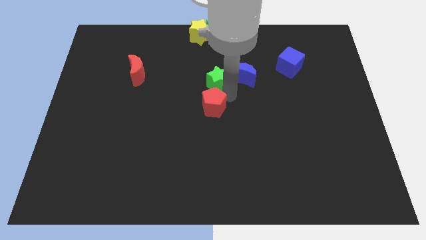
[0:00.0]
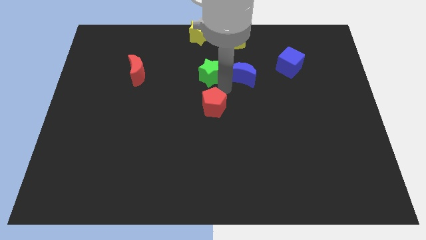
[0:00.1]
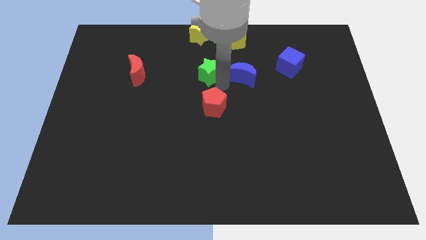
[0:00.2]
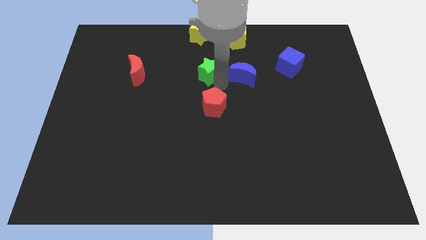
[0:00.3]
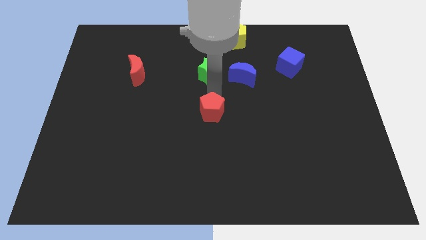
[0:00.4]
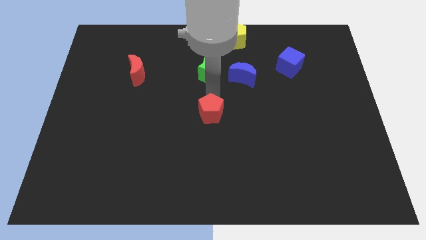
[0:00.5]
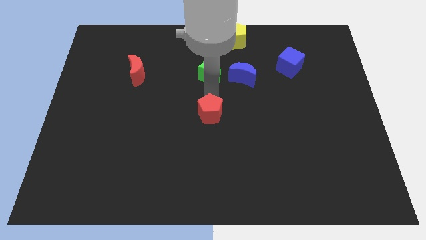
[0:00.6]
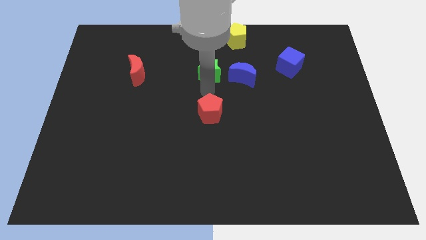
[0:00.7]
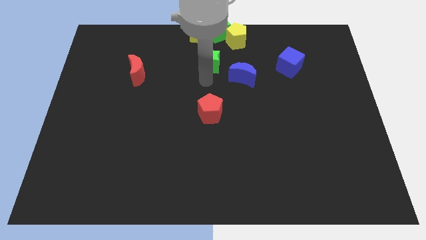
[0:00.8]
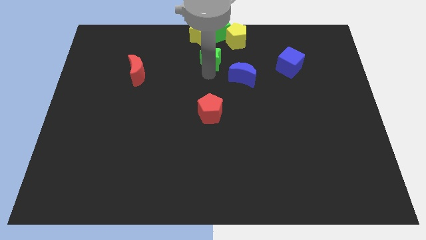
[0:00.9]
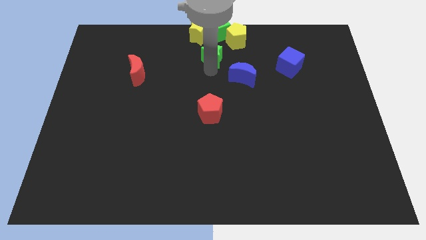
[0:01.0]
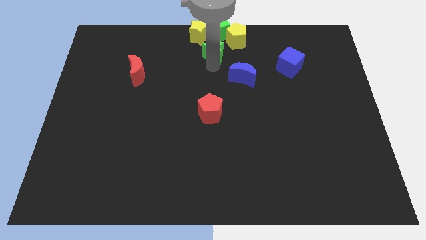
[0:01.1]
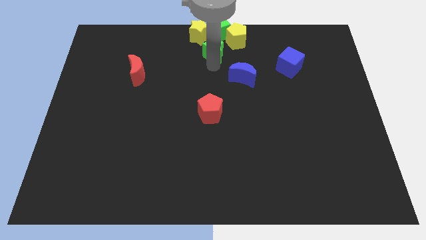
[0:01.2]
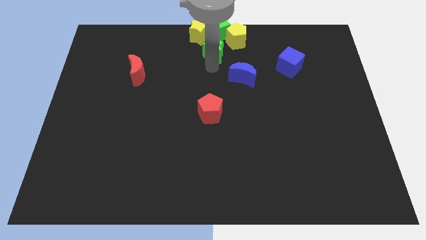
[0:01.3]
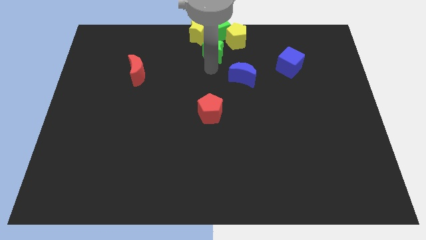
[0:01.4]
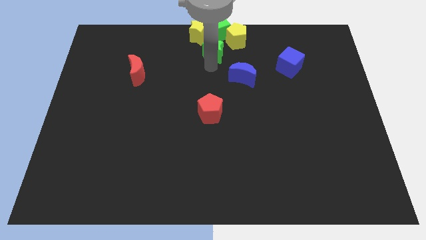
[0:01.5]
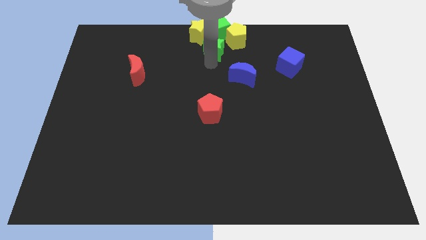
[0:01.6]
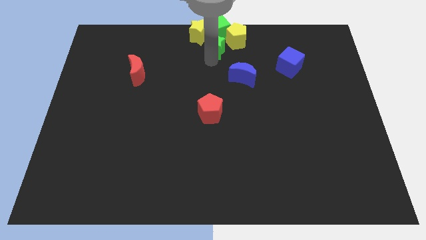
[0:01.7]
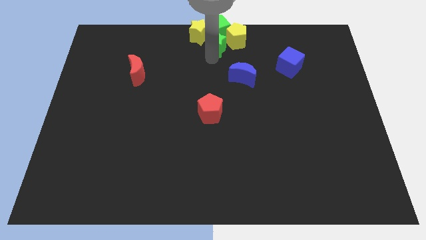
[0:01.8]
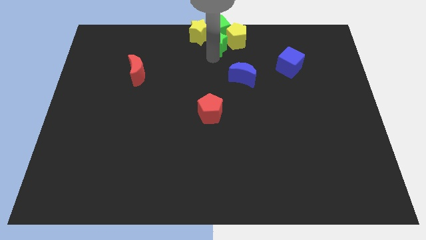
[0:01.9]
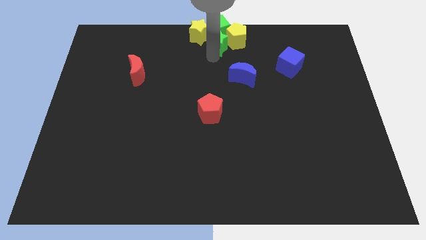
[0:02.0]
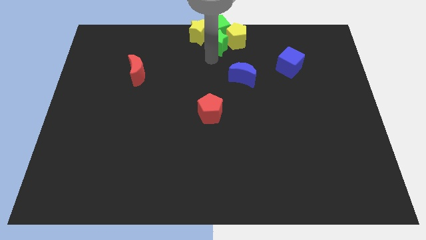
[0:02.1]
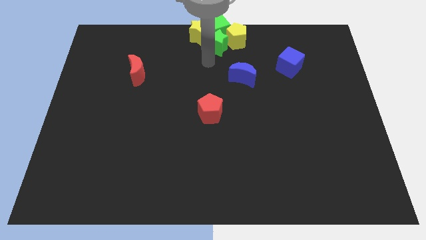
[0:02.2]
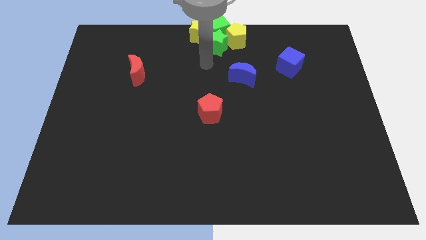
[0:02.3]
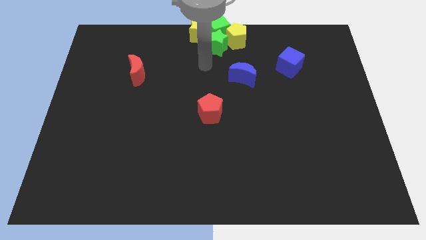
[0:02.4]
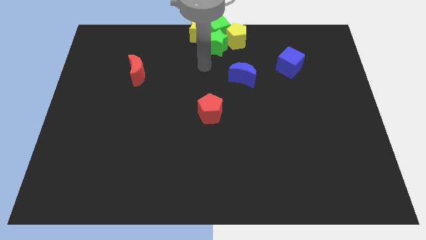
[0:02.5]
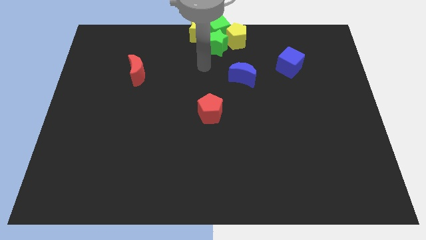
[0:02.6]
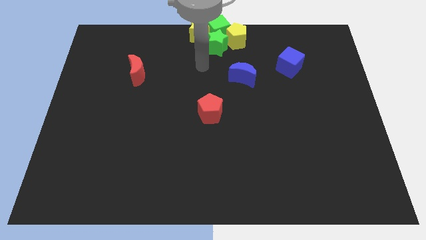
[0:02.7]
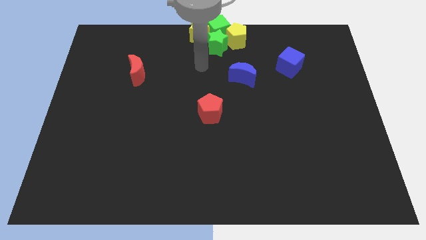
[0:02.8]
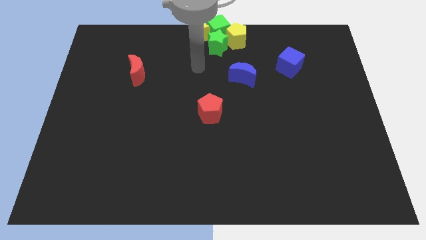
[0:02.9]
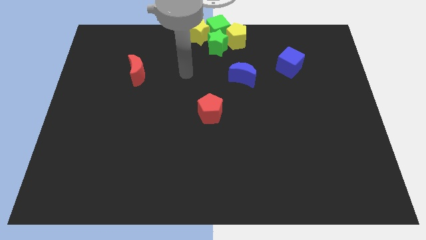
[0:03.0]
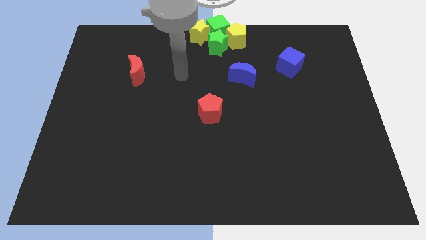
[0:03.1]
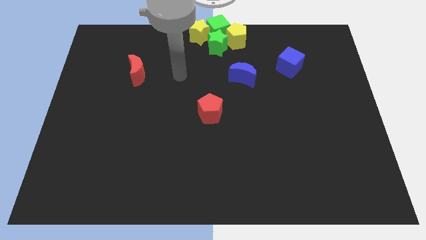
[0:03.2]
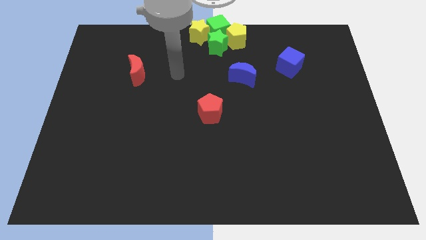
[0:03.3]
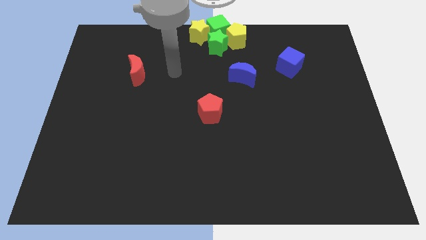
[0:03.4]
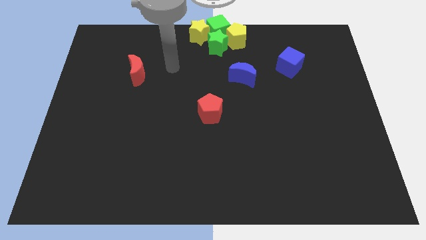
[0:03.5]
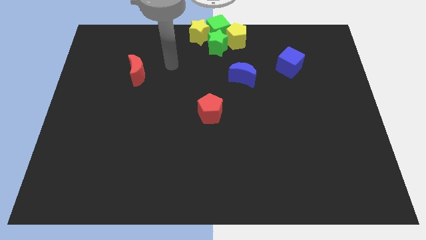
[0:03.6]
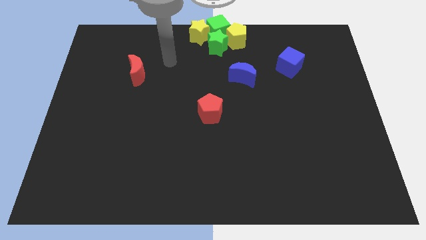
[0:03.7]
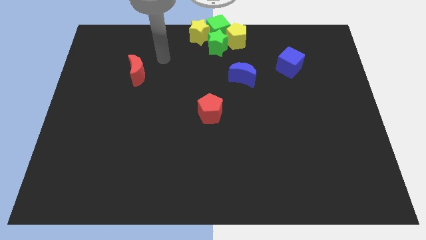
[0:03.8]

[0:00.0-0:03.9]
move the green star below the green cube

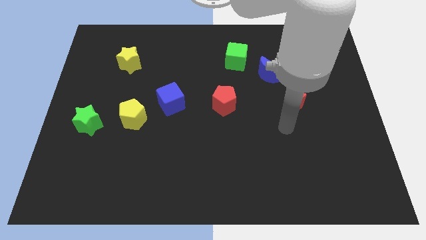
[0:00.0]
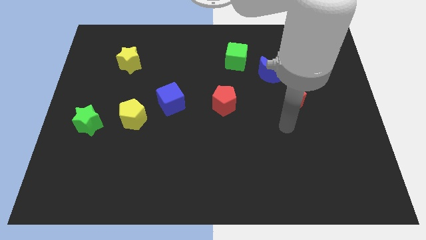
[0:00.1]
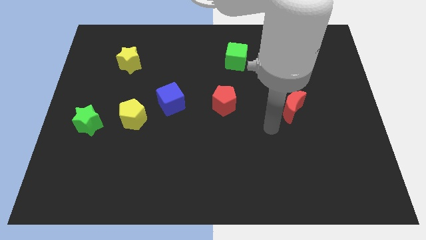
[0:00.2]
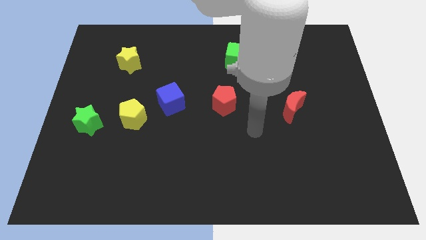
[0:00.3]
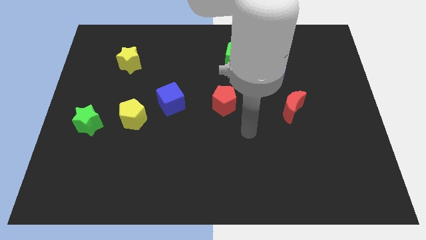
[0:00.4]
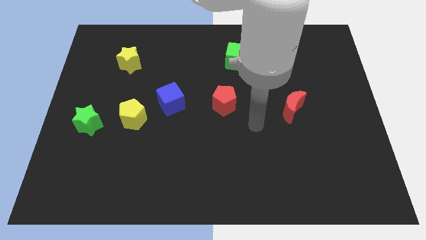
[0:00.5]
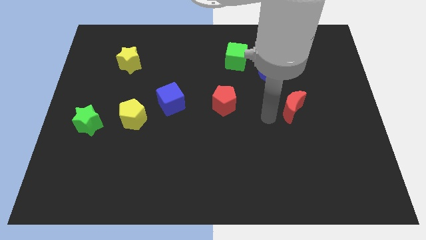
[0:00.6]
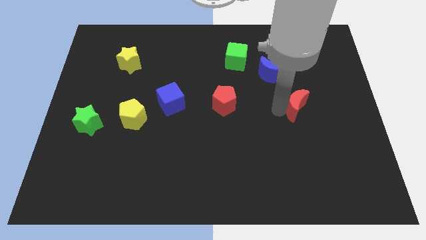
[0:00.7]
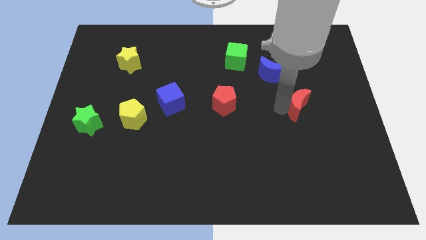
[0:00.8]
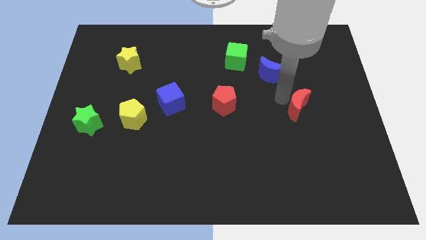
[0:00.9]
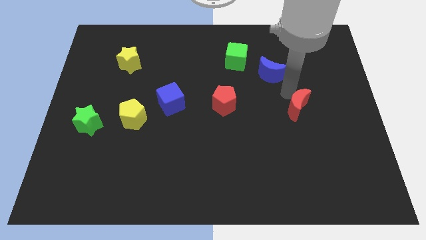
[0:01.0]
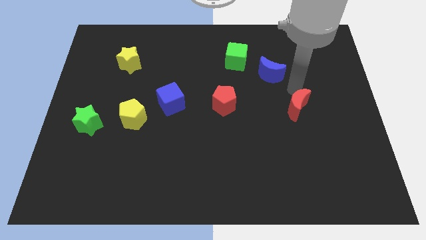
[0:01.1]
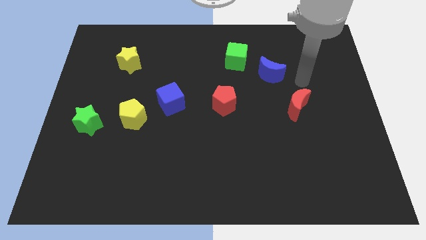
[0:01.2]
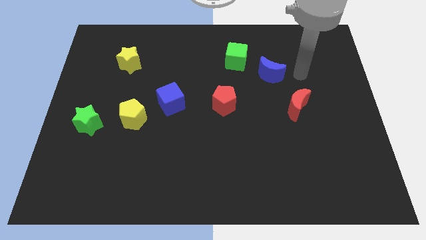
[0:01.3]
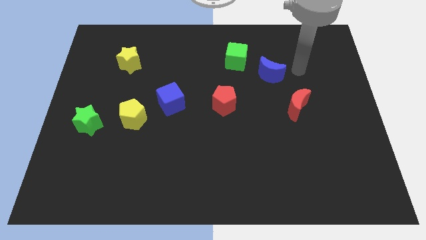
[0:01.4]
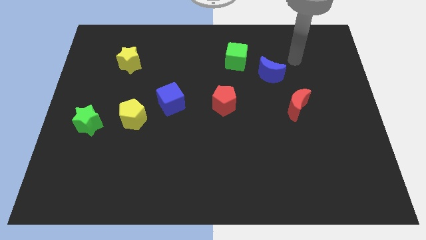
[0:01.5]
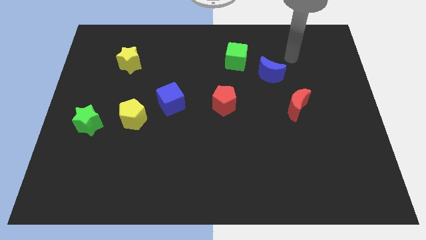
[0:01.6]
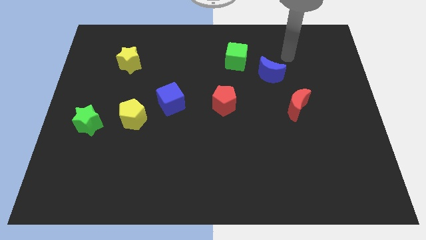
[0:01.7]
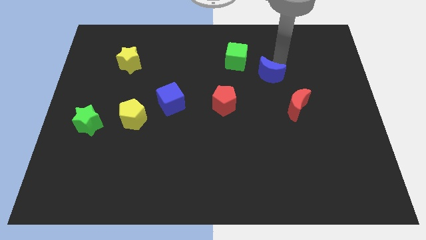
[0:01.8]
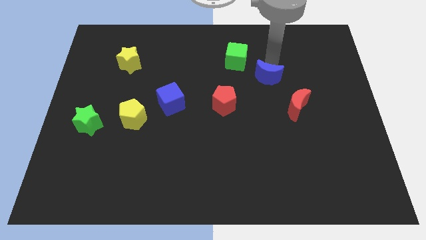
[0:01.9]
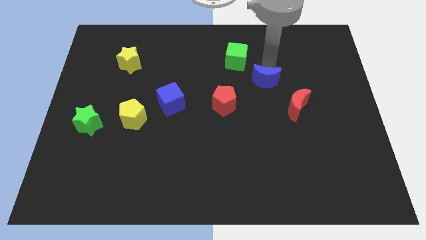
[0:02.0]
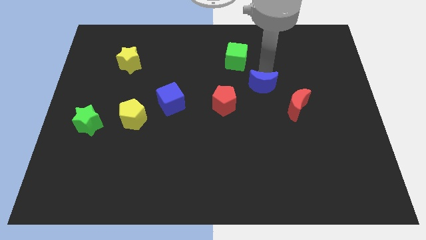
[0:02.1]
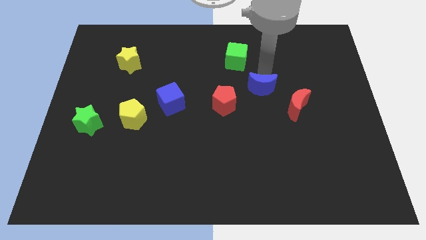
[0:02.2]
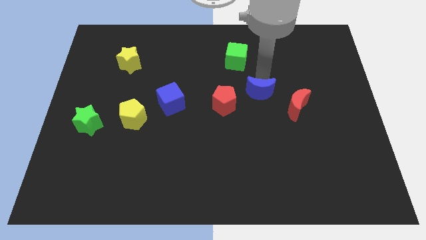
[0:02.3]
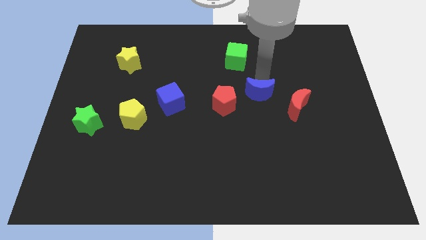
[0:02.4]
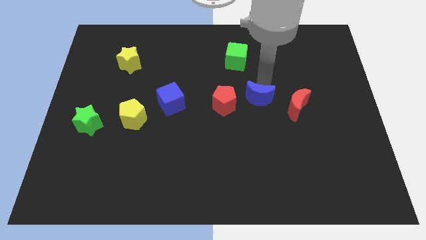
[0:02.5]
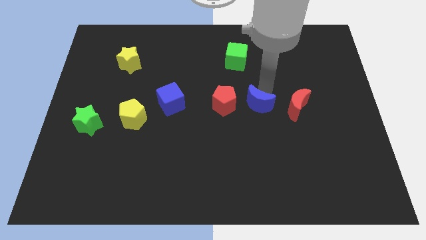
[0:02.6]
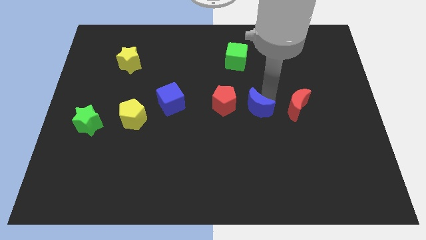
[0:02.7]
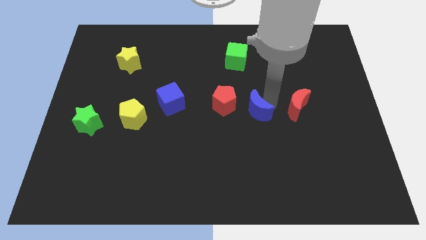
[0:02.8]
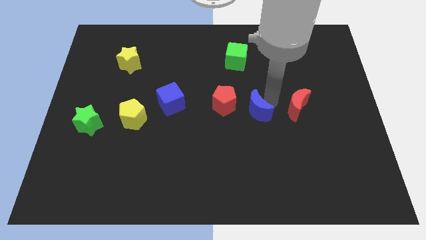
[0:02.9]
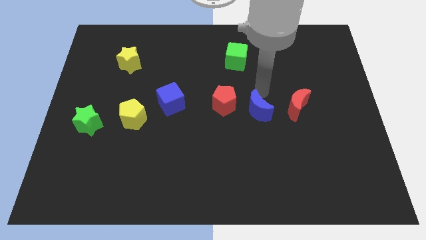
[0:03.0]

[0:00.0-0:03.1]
push blue crescent in between red crescent and red pentagon

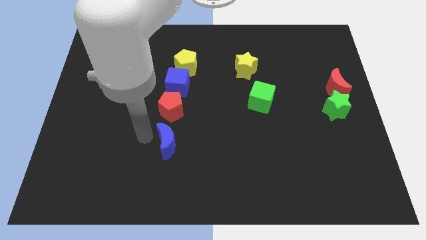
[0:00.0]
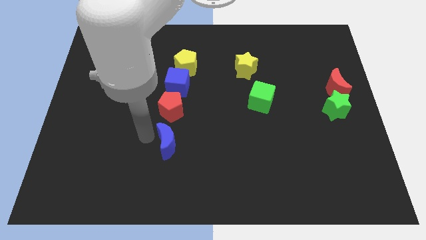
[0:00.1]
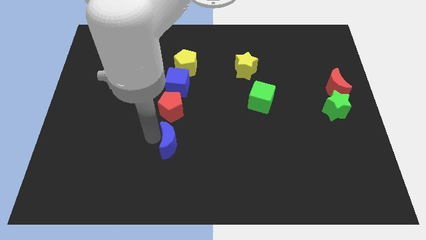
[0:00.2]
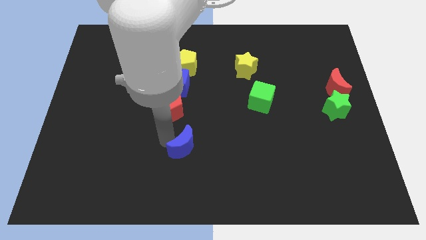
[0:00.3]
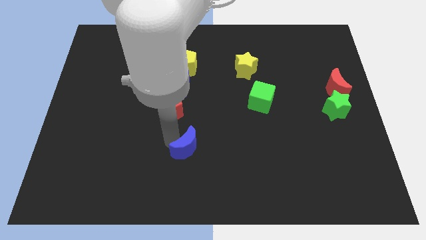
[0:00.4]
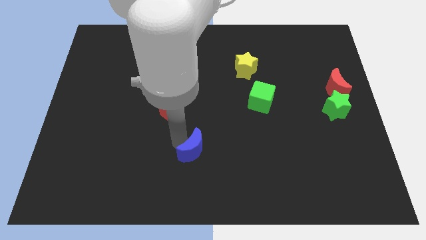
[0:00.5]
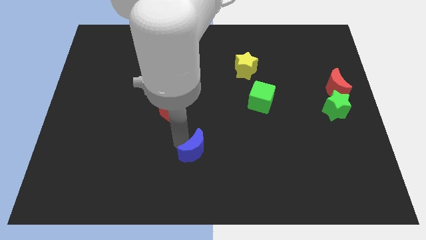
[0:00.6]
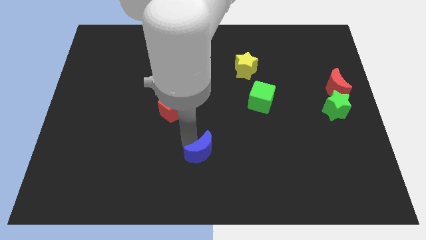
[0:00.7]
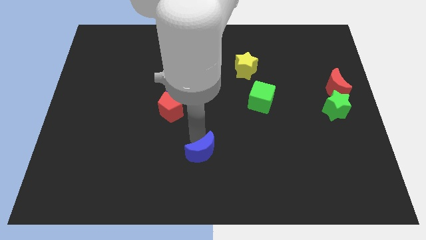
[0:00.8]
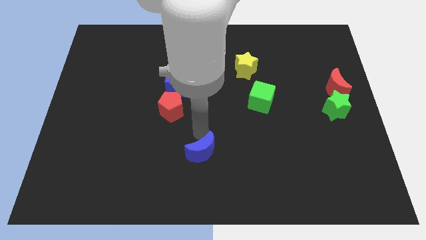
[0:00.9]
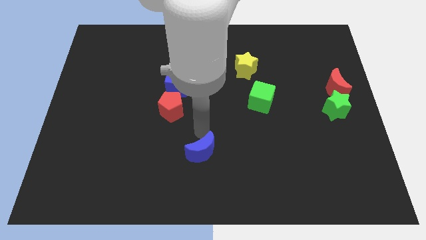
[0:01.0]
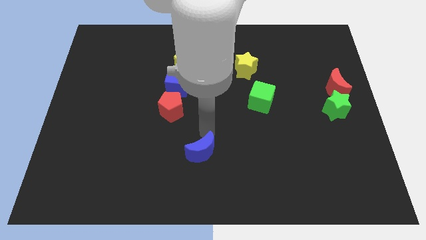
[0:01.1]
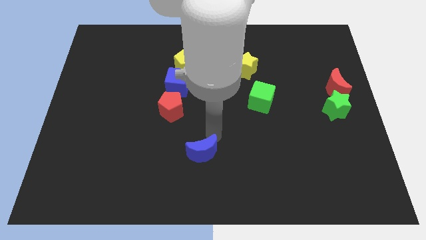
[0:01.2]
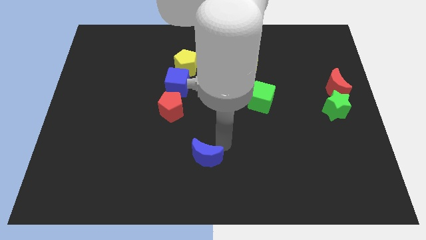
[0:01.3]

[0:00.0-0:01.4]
push the blue crescent to the right of the board

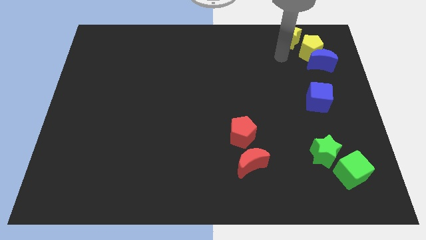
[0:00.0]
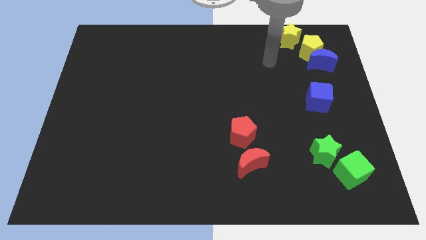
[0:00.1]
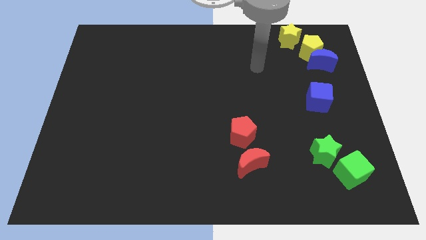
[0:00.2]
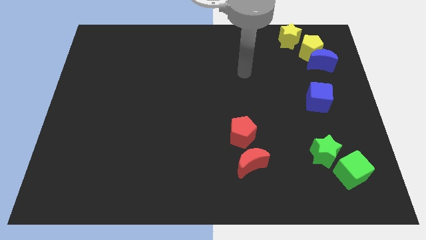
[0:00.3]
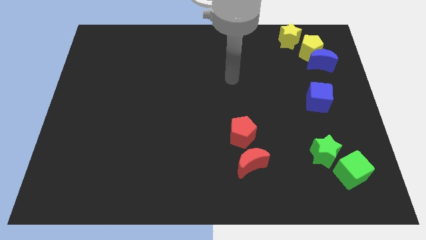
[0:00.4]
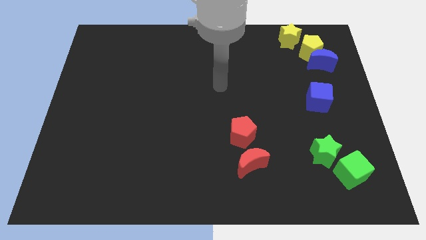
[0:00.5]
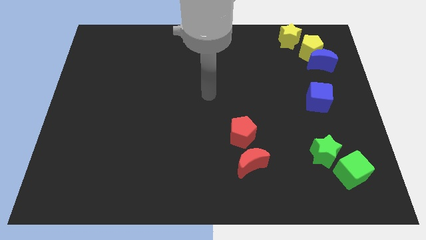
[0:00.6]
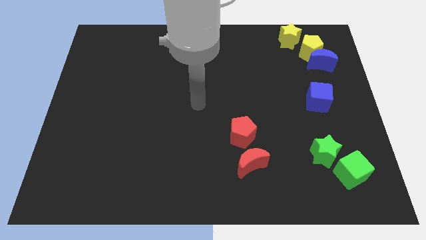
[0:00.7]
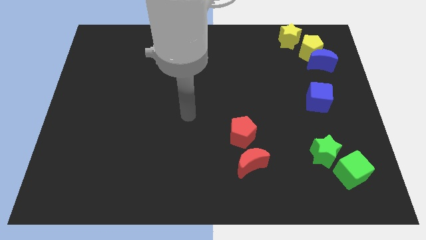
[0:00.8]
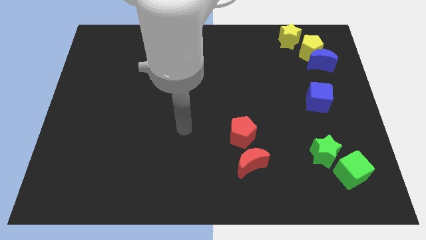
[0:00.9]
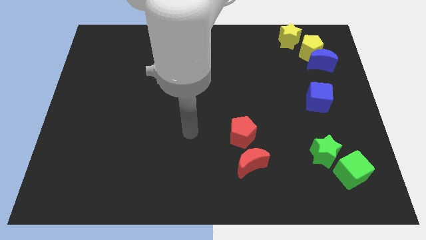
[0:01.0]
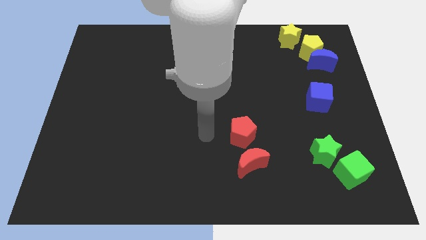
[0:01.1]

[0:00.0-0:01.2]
move your arm away from the yellow pentagon
